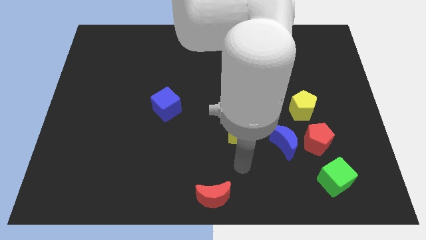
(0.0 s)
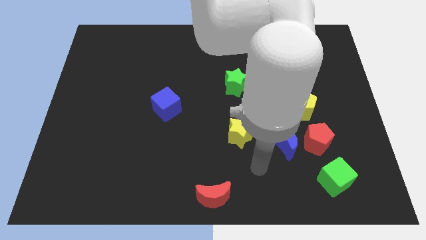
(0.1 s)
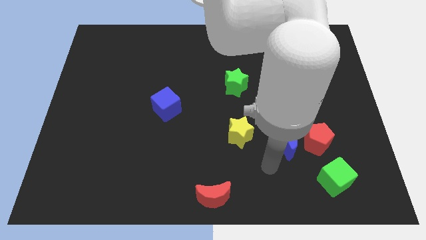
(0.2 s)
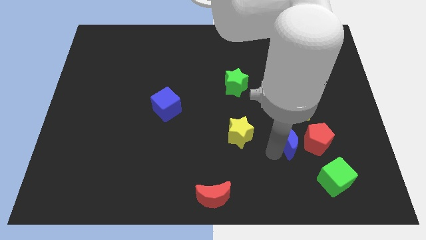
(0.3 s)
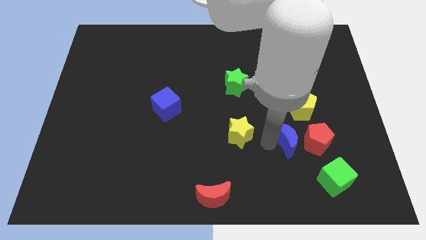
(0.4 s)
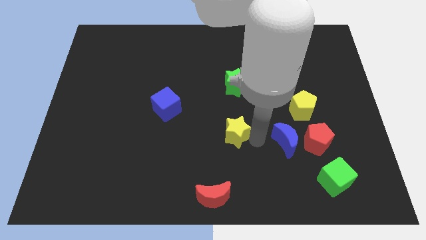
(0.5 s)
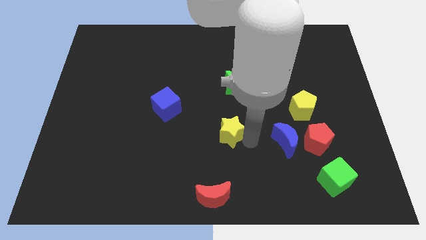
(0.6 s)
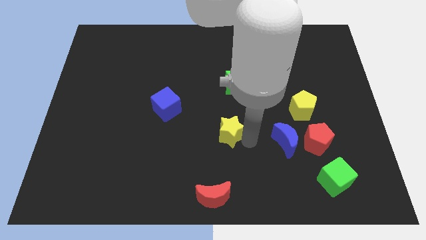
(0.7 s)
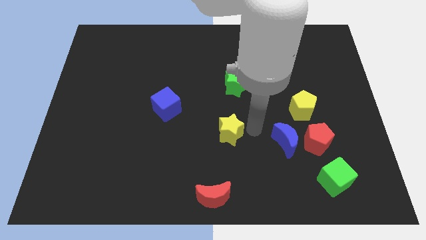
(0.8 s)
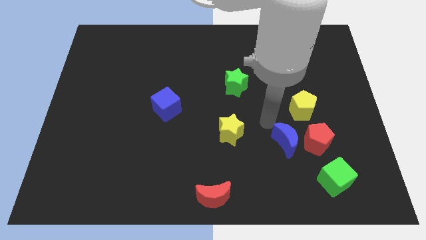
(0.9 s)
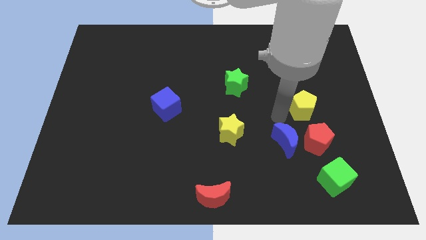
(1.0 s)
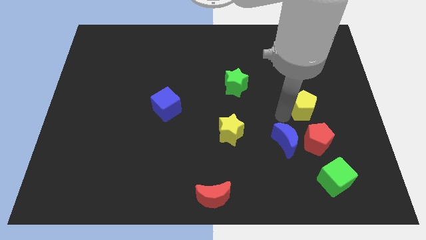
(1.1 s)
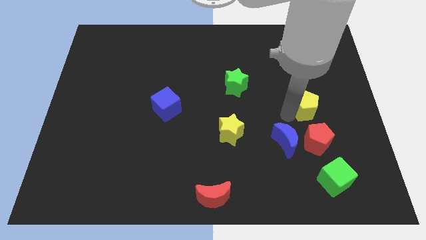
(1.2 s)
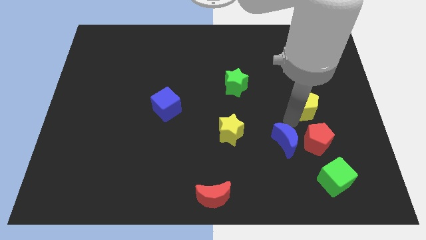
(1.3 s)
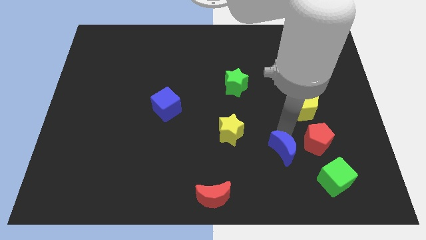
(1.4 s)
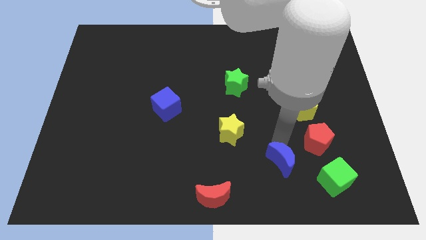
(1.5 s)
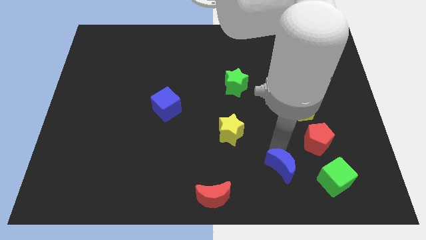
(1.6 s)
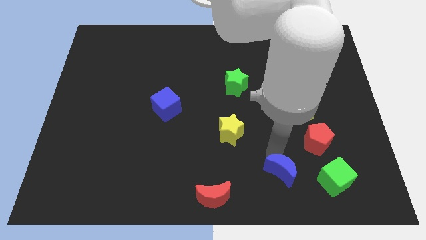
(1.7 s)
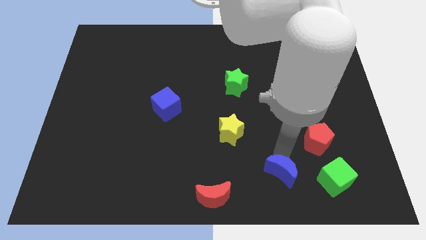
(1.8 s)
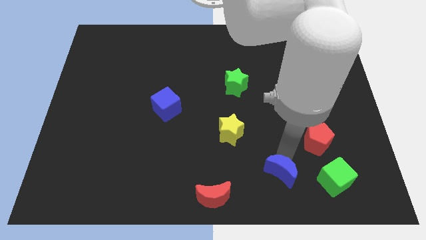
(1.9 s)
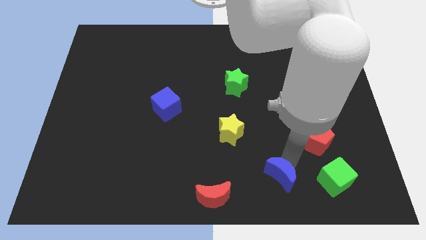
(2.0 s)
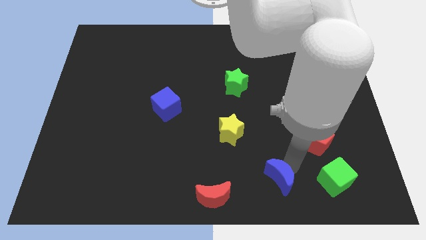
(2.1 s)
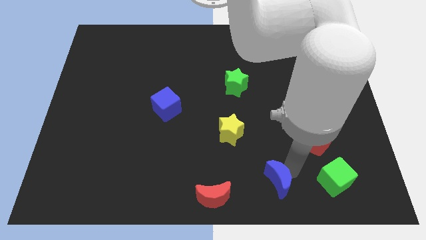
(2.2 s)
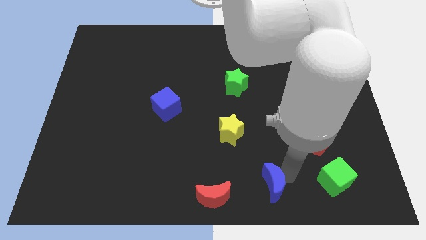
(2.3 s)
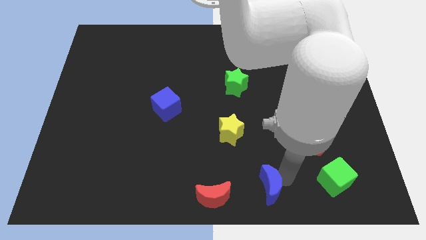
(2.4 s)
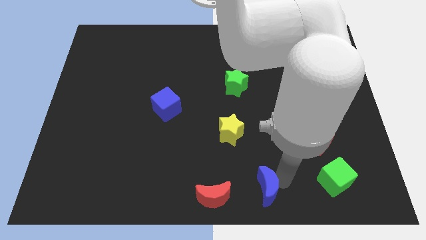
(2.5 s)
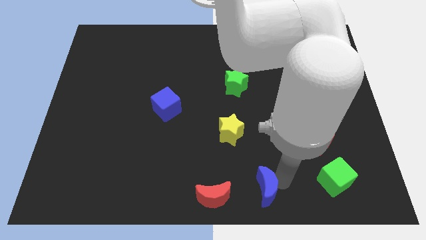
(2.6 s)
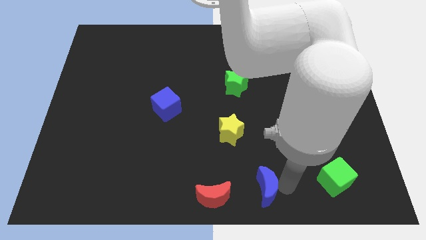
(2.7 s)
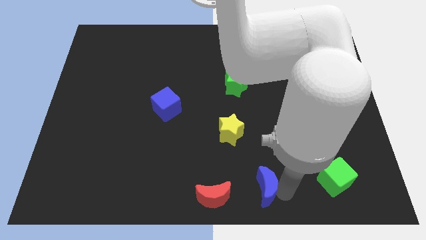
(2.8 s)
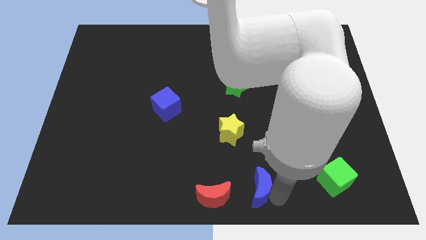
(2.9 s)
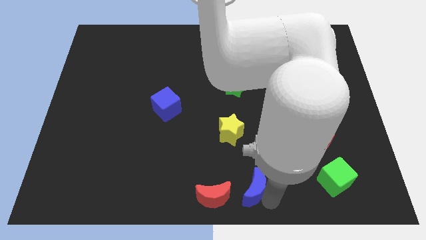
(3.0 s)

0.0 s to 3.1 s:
push the blue moon towards red crescent

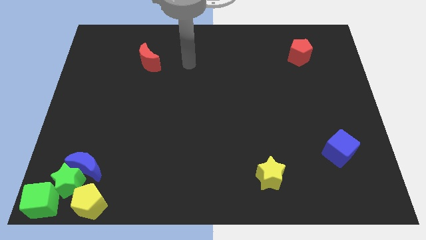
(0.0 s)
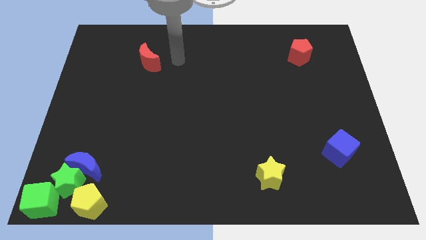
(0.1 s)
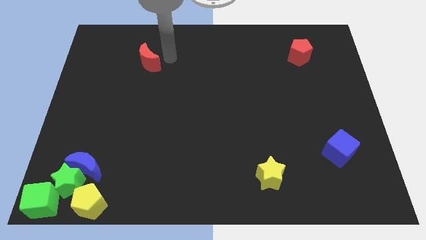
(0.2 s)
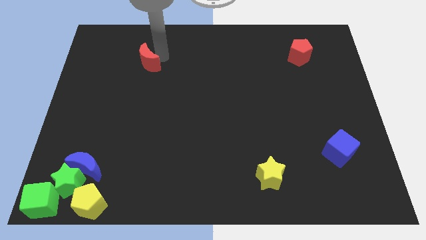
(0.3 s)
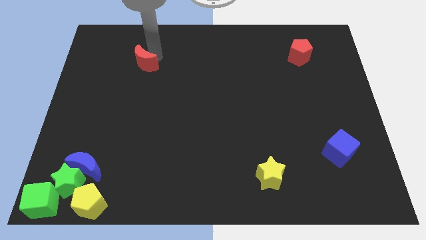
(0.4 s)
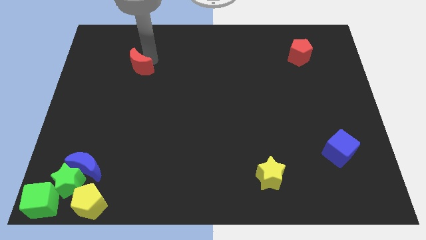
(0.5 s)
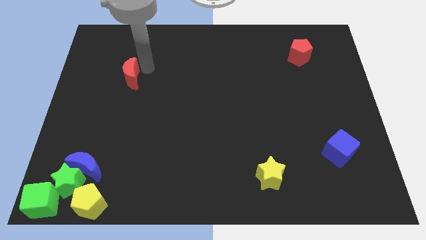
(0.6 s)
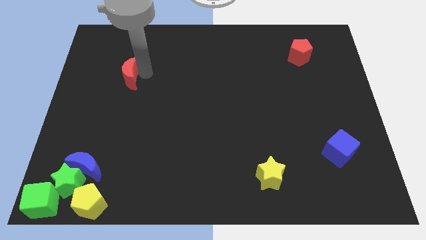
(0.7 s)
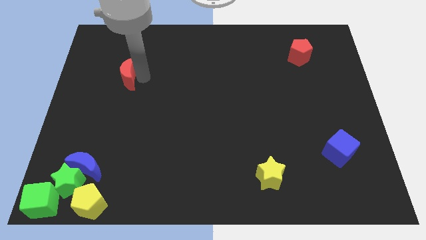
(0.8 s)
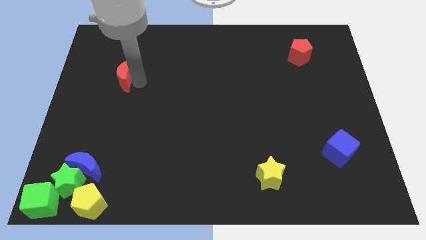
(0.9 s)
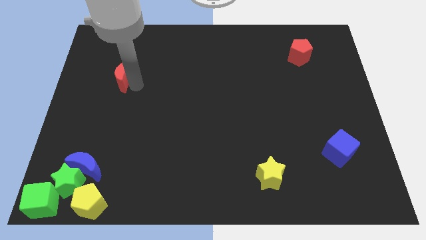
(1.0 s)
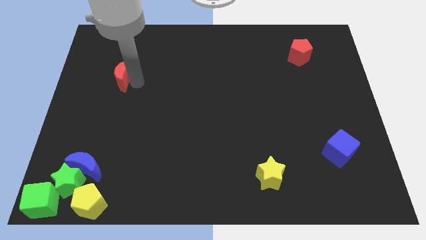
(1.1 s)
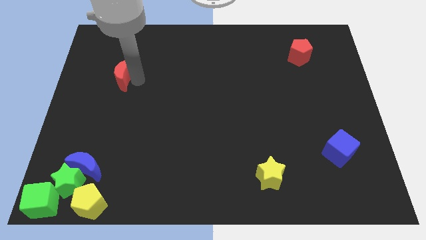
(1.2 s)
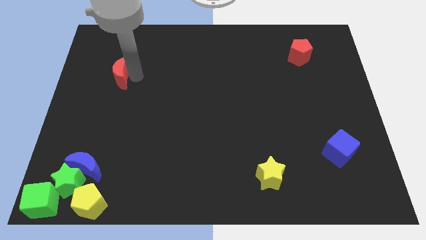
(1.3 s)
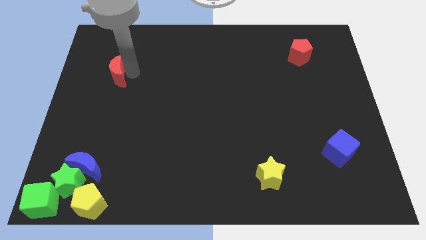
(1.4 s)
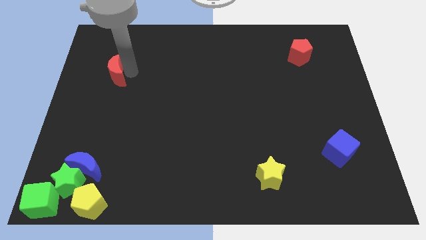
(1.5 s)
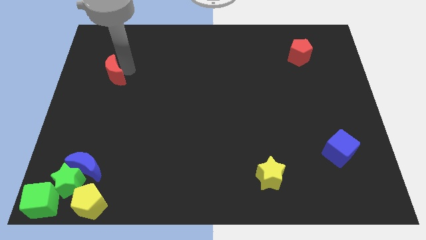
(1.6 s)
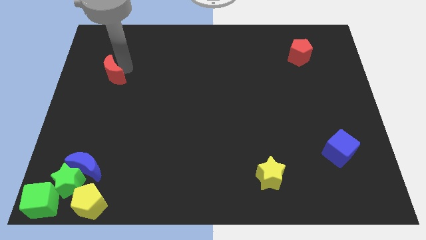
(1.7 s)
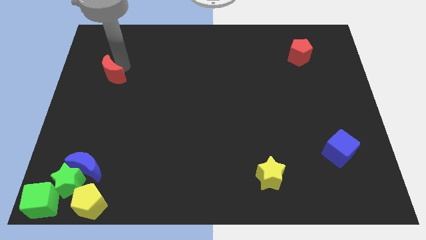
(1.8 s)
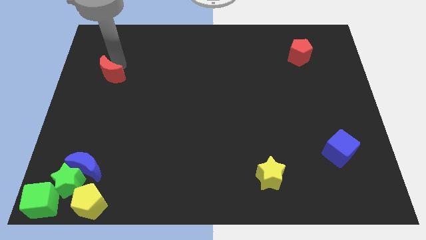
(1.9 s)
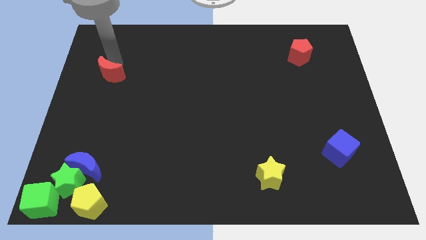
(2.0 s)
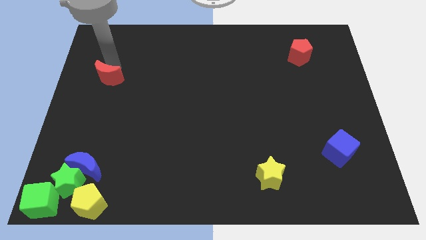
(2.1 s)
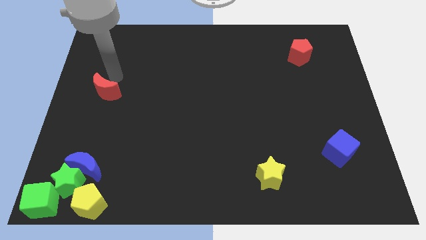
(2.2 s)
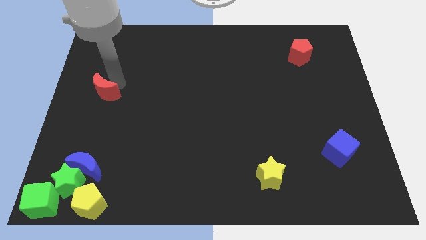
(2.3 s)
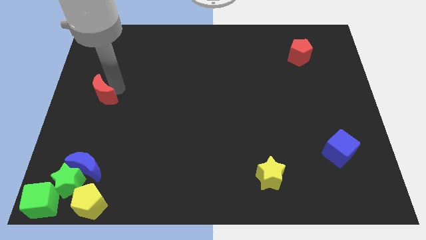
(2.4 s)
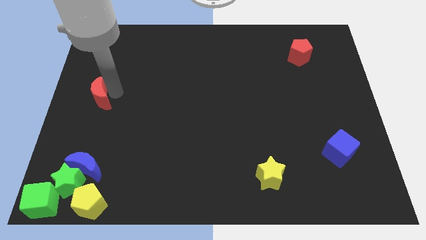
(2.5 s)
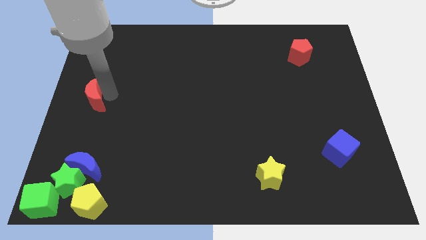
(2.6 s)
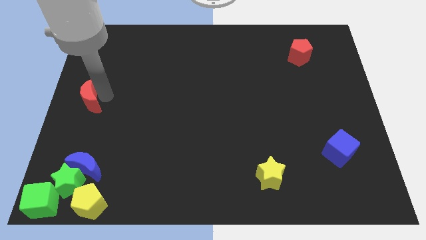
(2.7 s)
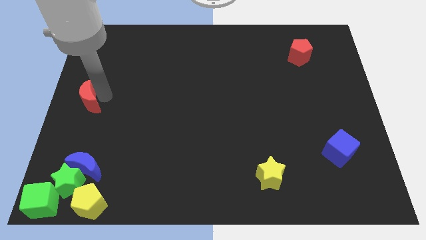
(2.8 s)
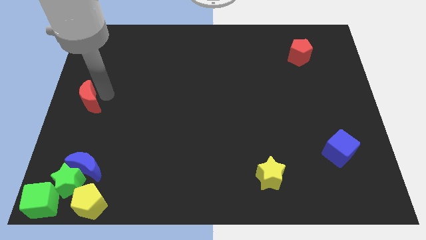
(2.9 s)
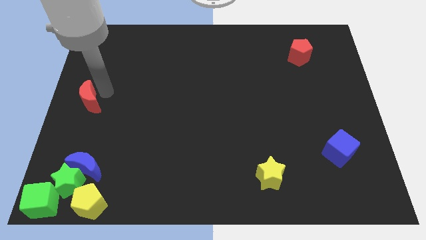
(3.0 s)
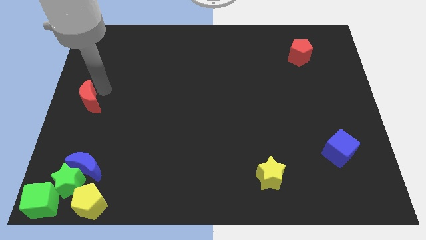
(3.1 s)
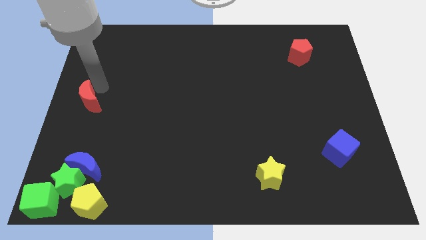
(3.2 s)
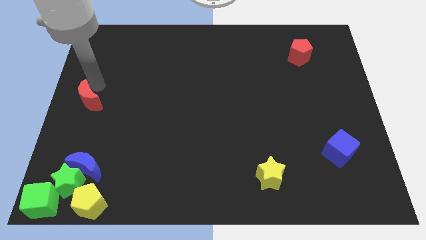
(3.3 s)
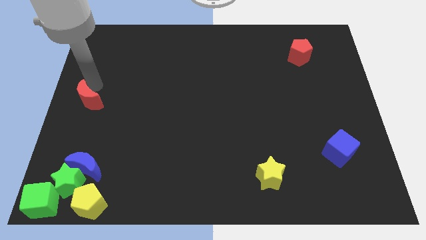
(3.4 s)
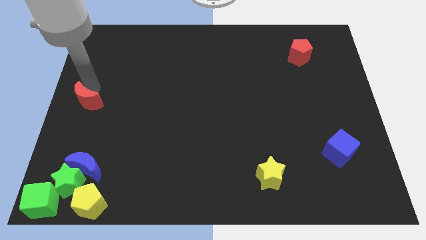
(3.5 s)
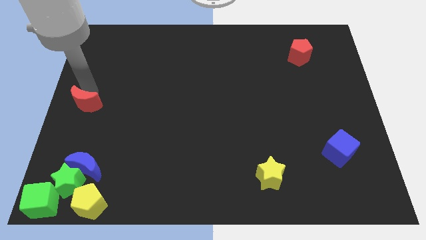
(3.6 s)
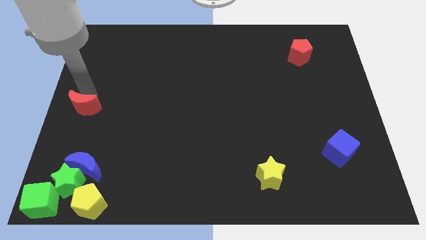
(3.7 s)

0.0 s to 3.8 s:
move the red moon to the vertical top side of the blue moon

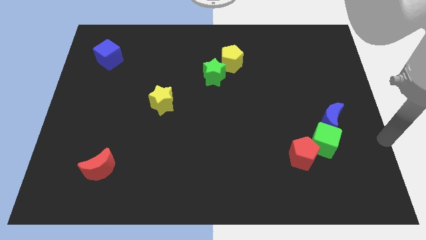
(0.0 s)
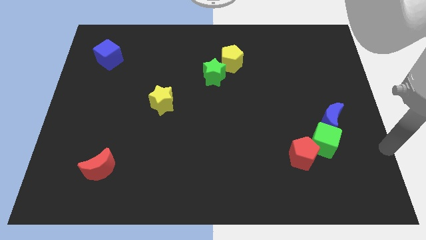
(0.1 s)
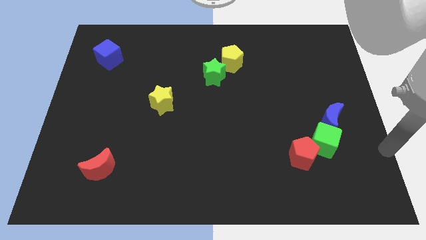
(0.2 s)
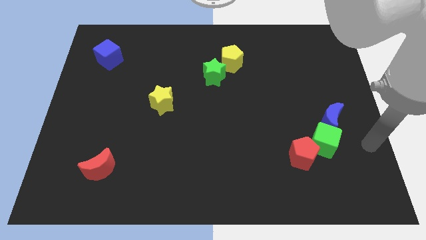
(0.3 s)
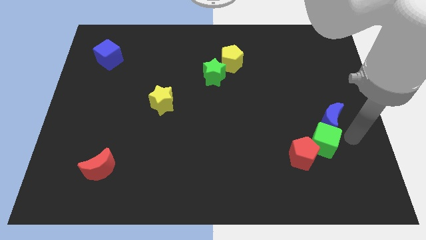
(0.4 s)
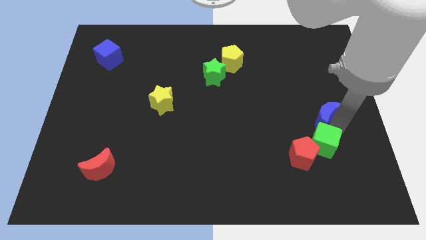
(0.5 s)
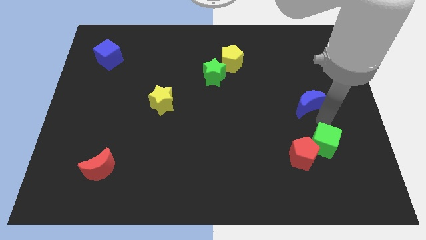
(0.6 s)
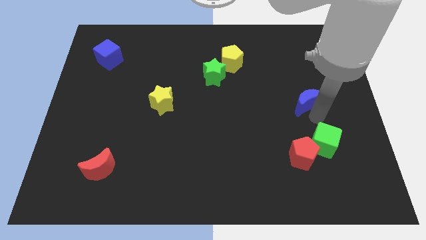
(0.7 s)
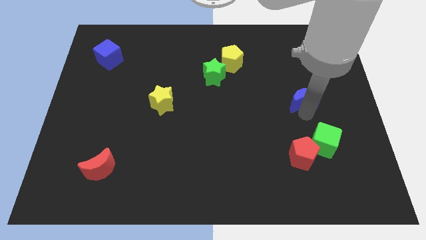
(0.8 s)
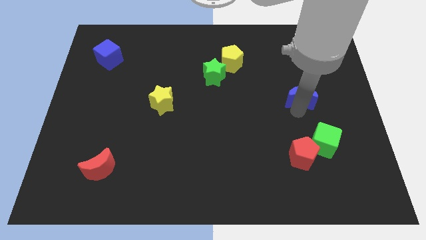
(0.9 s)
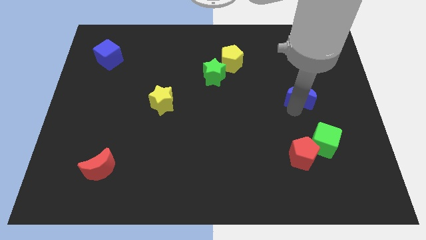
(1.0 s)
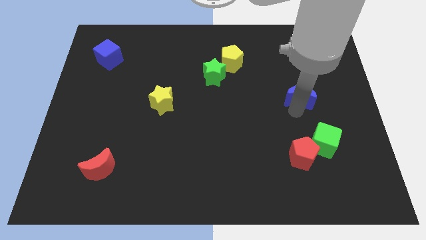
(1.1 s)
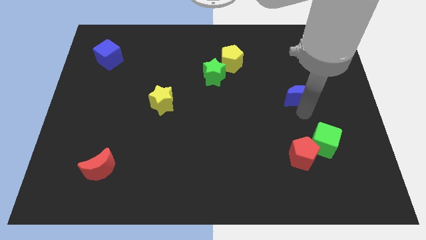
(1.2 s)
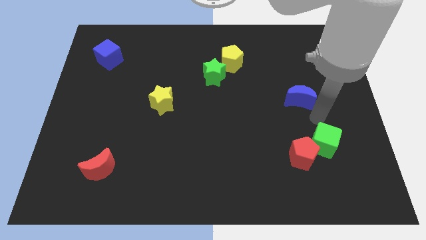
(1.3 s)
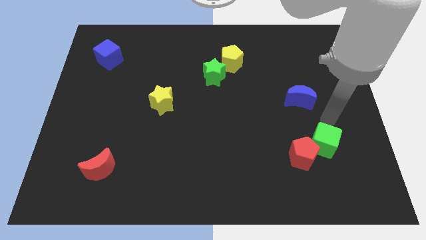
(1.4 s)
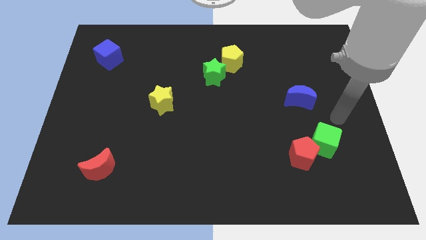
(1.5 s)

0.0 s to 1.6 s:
move the blue moon diagonal to the green cube

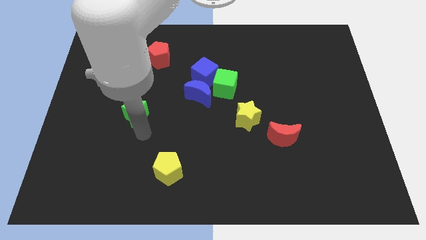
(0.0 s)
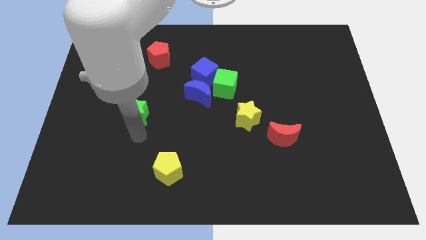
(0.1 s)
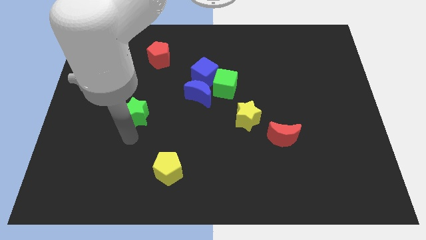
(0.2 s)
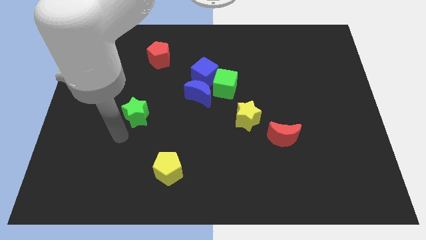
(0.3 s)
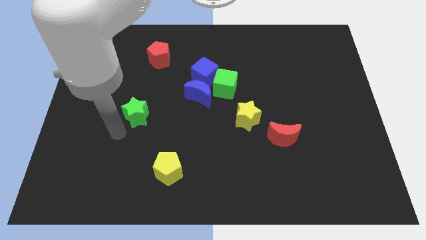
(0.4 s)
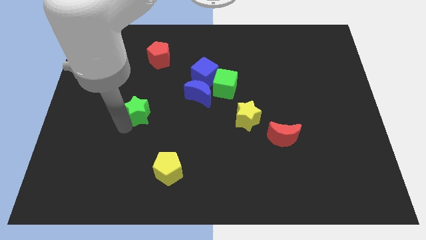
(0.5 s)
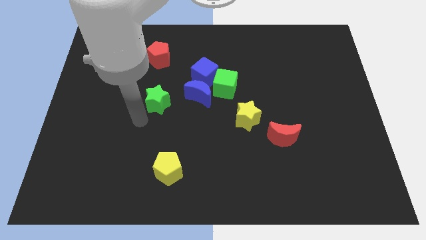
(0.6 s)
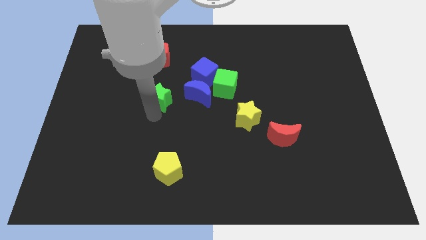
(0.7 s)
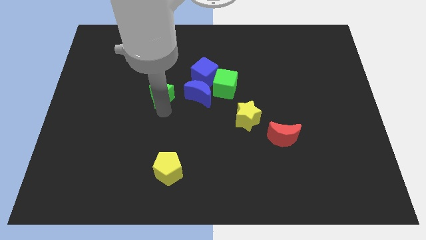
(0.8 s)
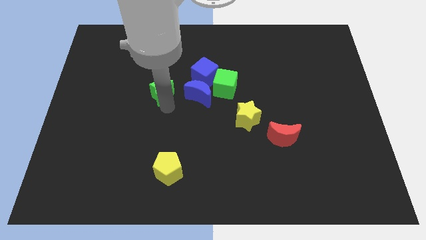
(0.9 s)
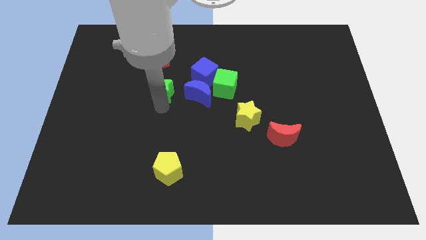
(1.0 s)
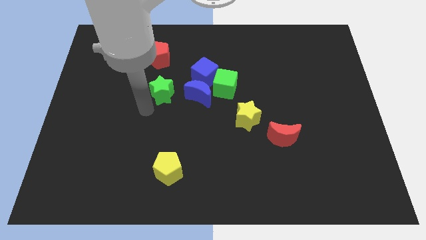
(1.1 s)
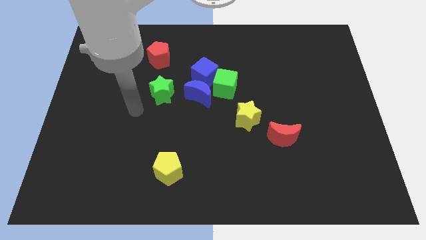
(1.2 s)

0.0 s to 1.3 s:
push the green star below the red pentagon
